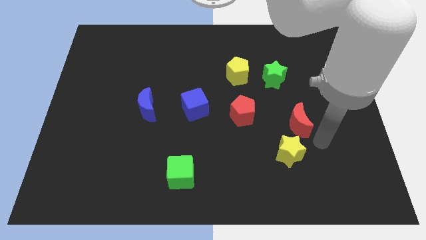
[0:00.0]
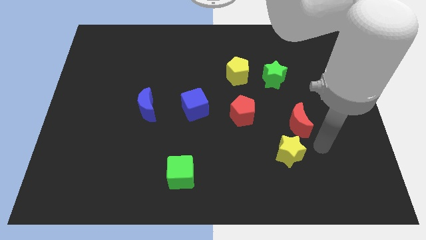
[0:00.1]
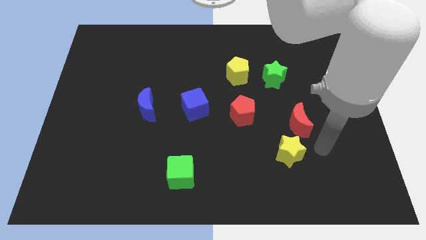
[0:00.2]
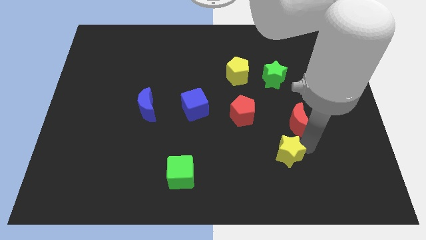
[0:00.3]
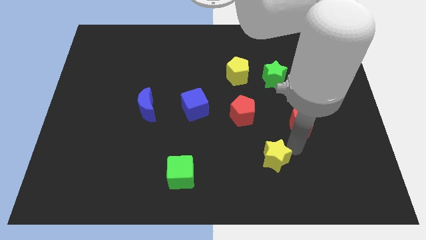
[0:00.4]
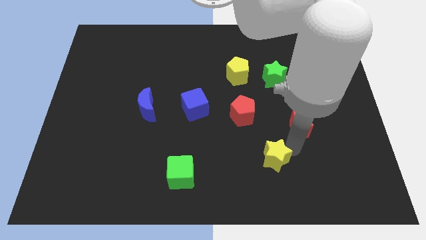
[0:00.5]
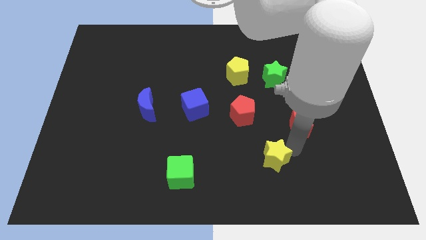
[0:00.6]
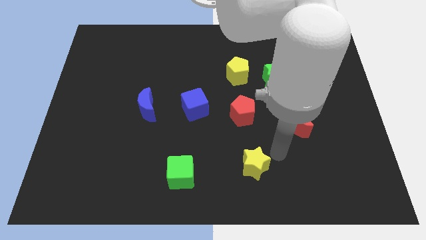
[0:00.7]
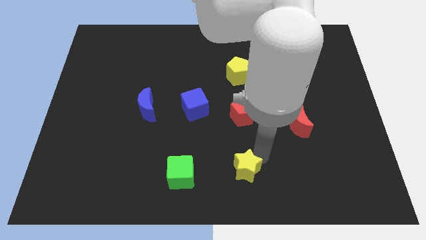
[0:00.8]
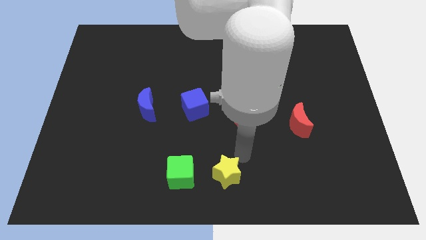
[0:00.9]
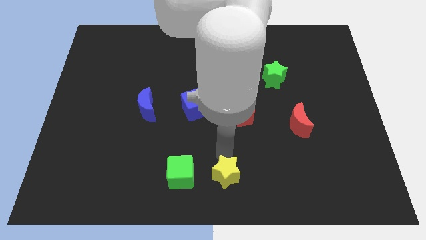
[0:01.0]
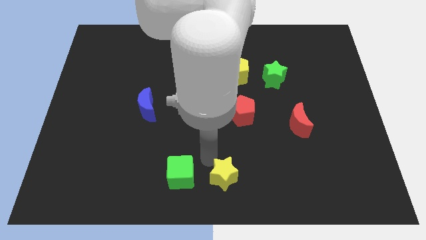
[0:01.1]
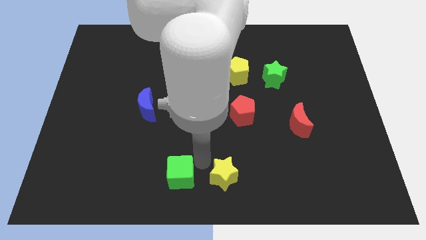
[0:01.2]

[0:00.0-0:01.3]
move the yellow star to the right of the green cube

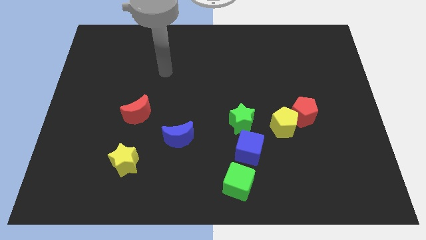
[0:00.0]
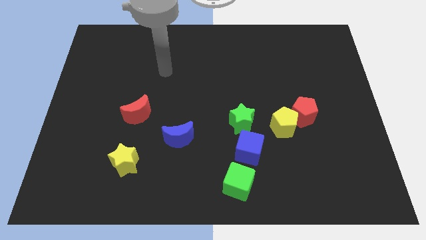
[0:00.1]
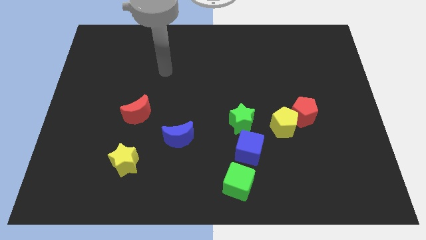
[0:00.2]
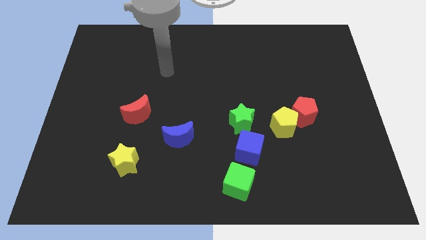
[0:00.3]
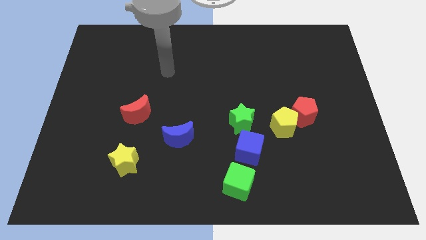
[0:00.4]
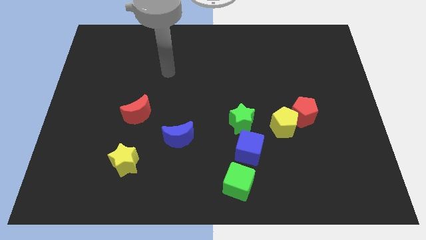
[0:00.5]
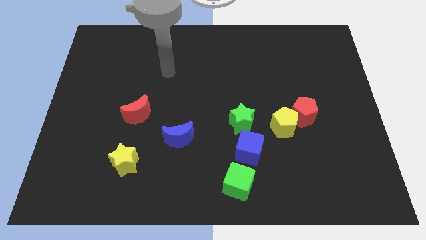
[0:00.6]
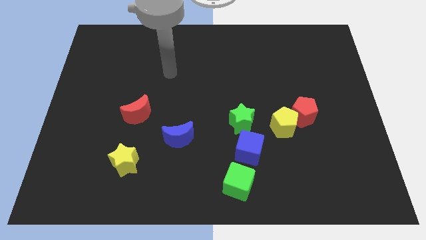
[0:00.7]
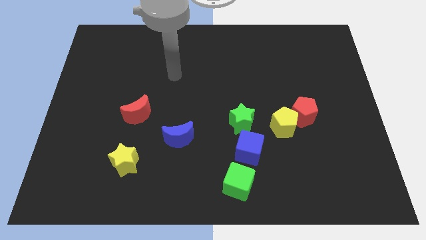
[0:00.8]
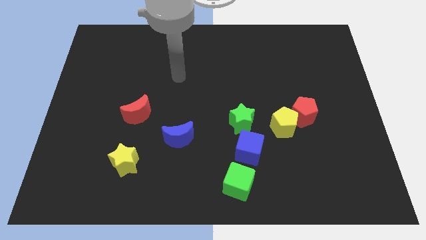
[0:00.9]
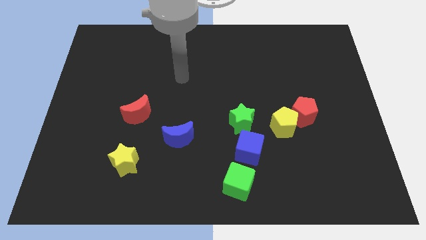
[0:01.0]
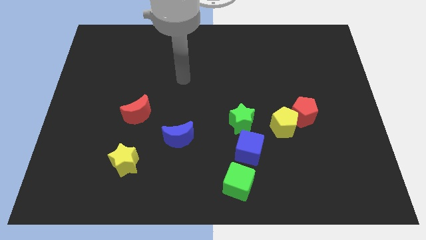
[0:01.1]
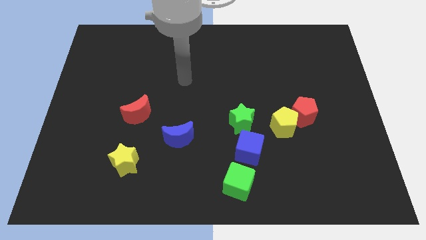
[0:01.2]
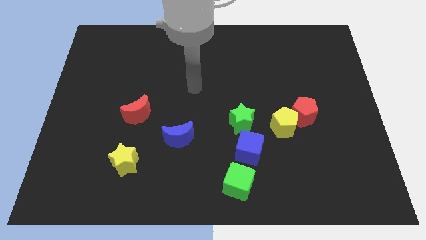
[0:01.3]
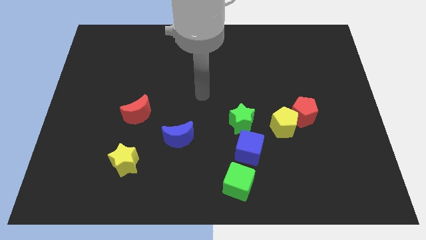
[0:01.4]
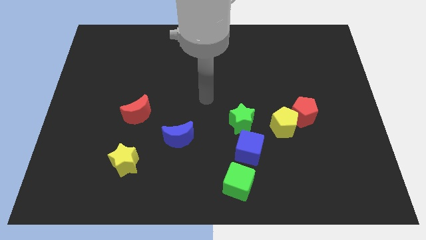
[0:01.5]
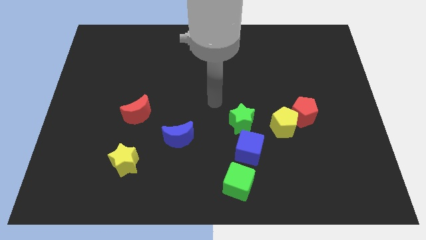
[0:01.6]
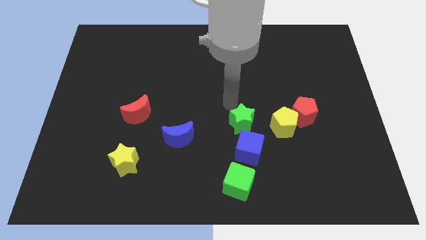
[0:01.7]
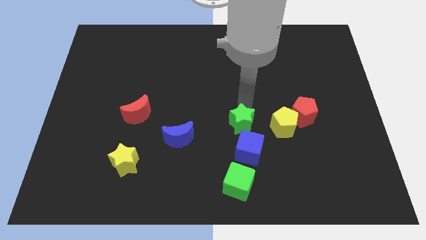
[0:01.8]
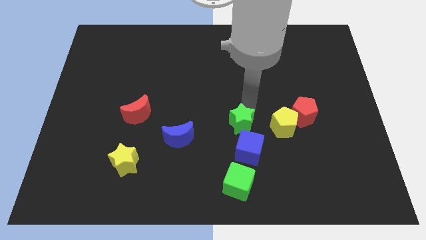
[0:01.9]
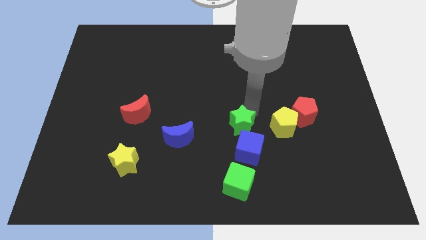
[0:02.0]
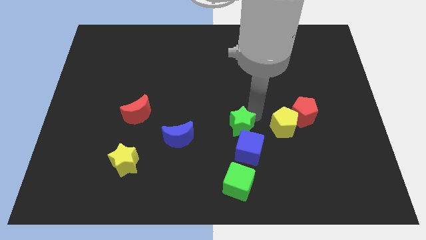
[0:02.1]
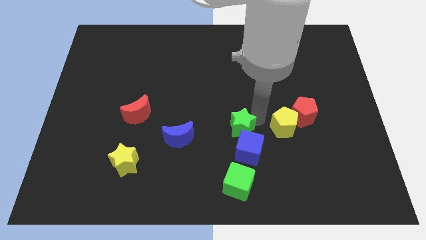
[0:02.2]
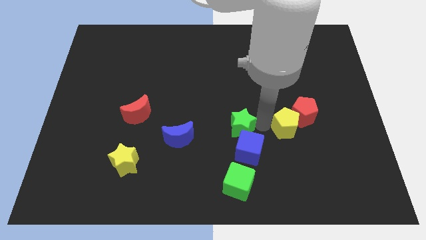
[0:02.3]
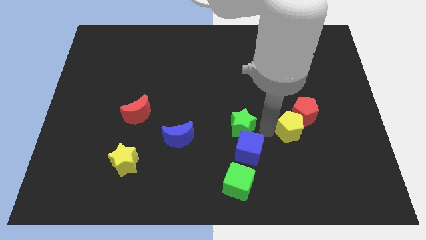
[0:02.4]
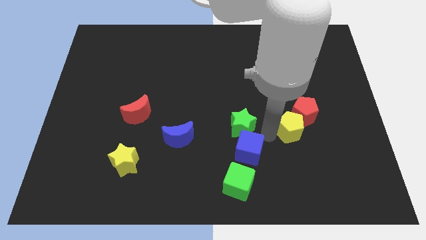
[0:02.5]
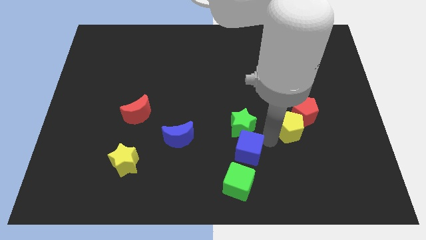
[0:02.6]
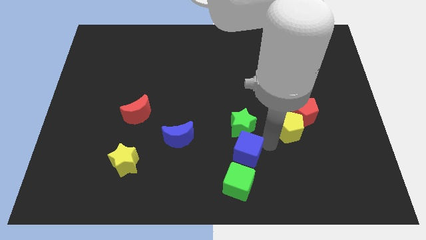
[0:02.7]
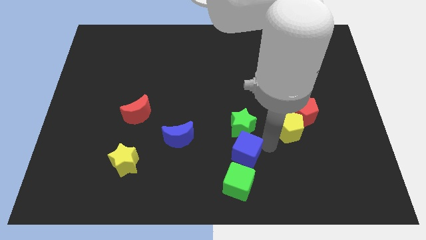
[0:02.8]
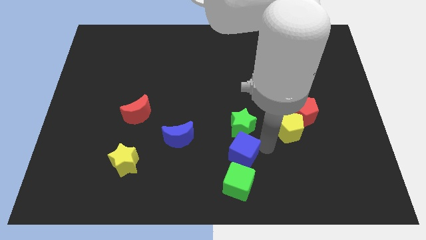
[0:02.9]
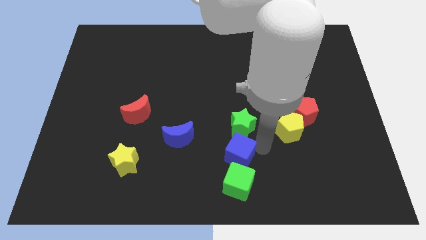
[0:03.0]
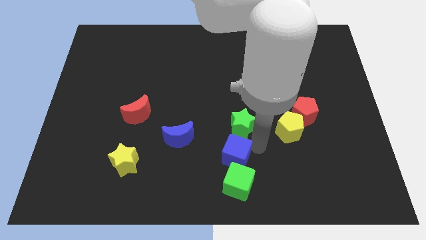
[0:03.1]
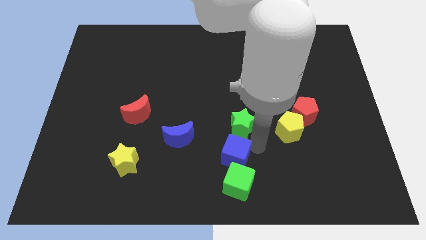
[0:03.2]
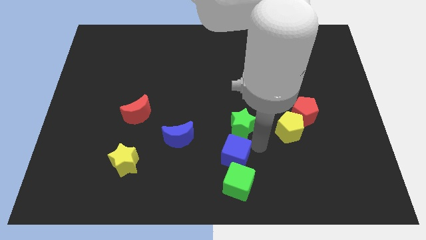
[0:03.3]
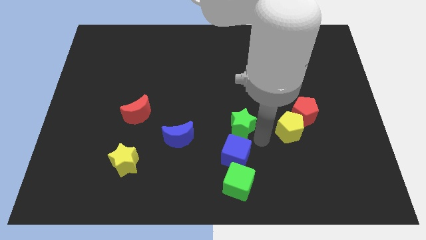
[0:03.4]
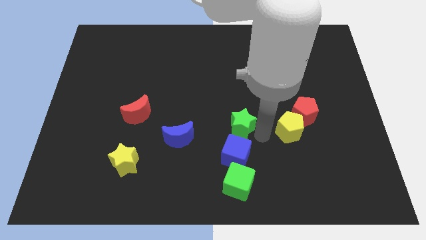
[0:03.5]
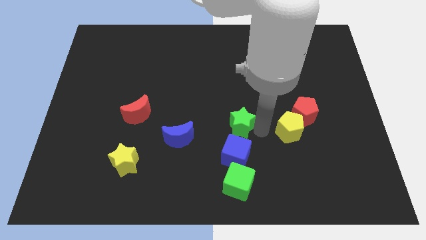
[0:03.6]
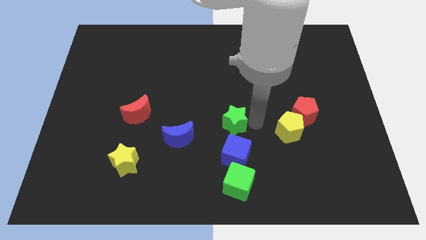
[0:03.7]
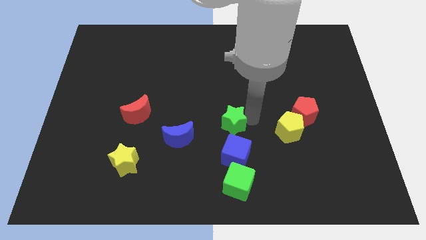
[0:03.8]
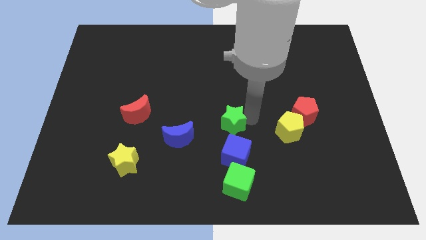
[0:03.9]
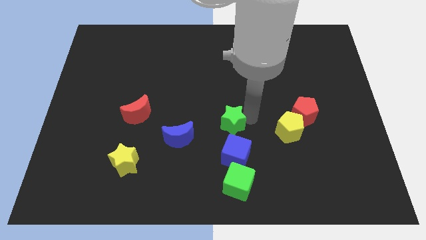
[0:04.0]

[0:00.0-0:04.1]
place the blue cube in between the green star and green cube

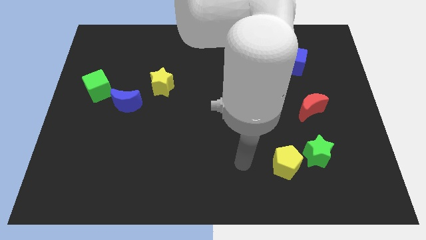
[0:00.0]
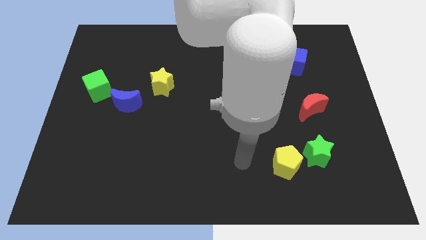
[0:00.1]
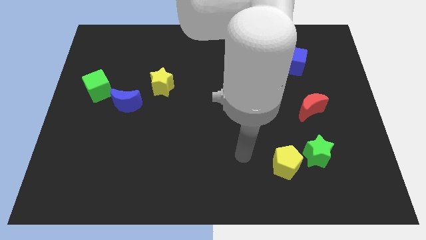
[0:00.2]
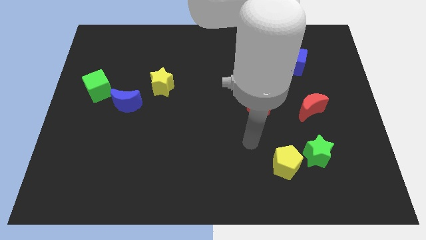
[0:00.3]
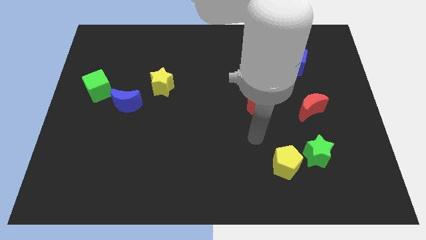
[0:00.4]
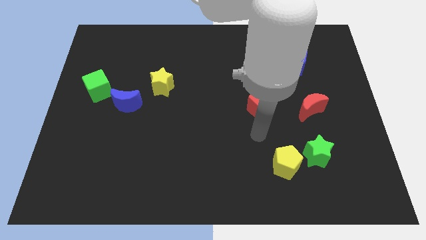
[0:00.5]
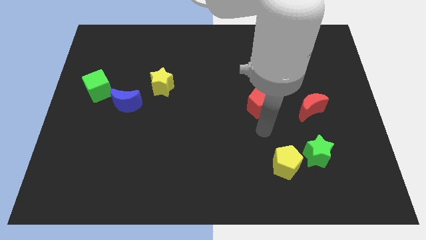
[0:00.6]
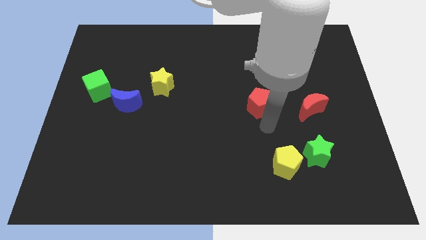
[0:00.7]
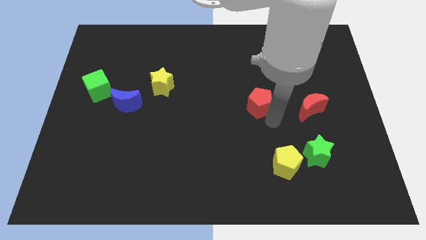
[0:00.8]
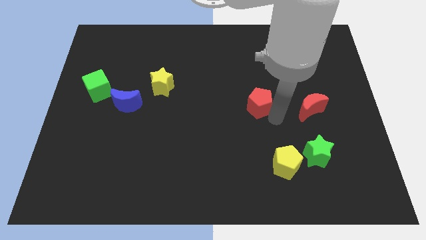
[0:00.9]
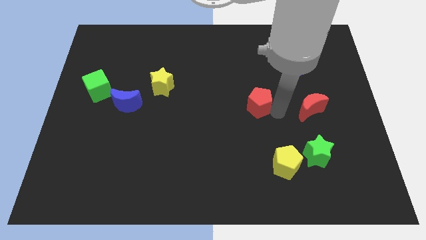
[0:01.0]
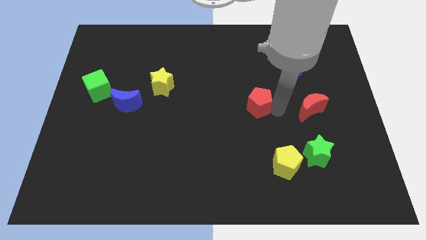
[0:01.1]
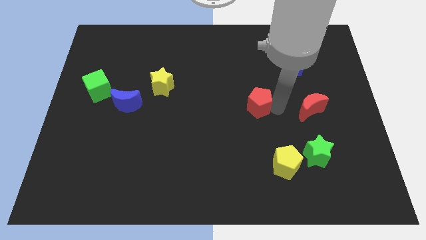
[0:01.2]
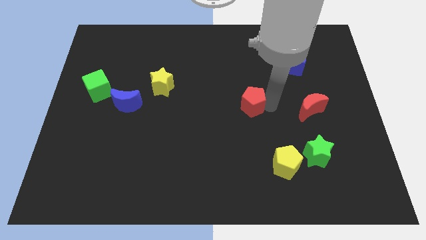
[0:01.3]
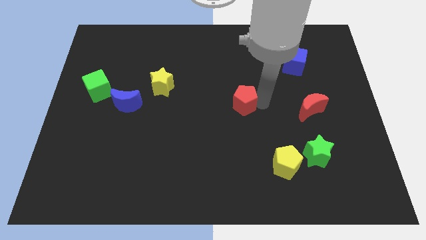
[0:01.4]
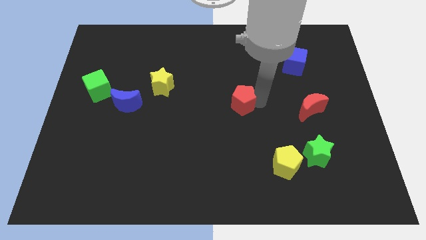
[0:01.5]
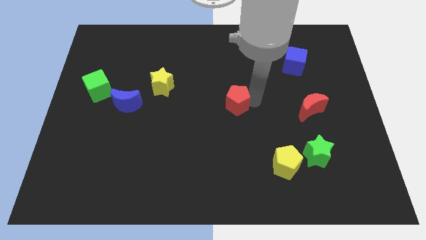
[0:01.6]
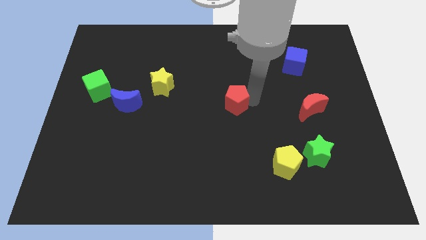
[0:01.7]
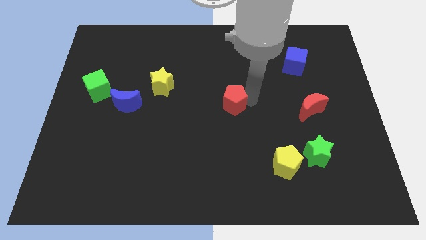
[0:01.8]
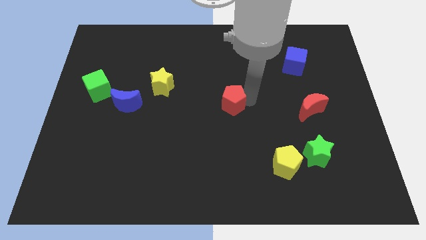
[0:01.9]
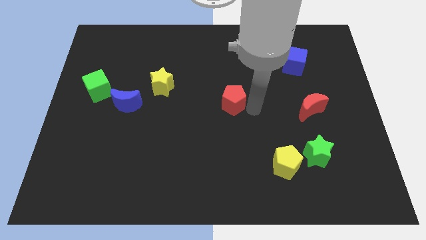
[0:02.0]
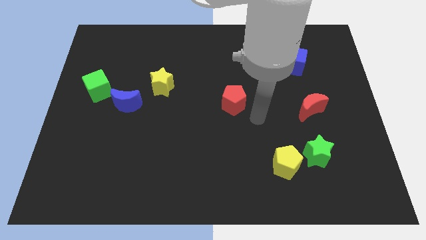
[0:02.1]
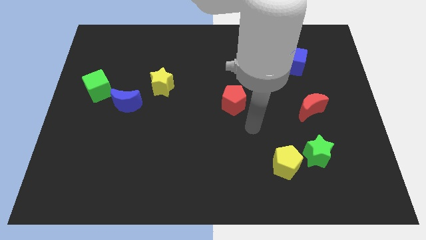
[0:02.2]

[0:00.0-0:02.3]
move red pentagon a bit apart from red crescent

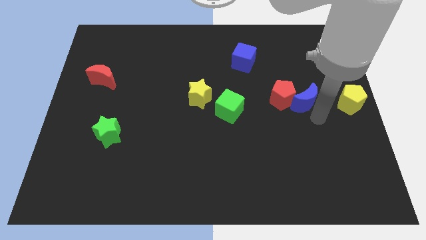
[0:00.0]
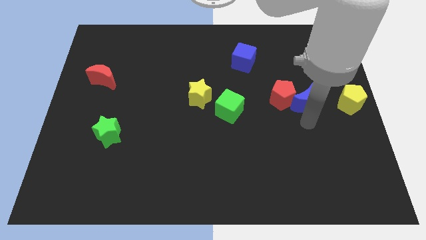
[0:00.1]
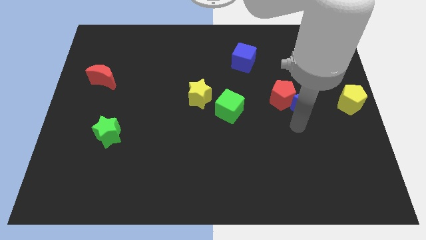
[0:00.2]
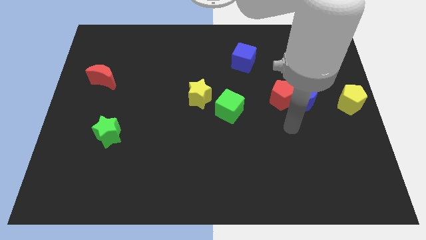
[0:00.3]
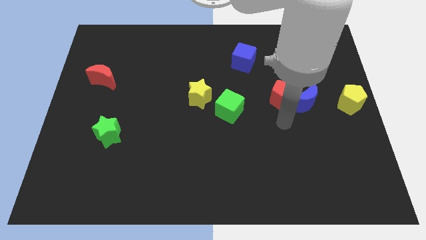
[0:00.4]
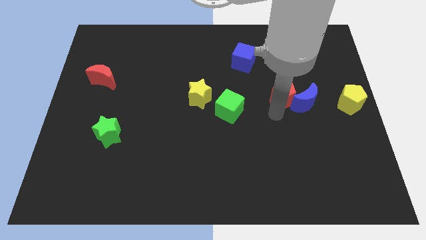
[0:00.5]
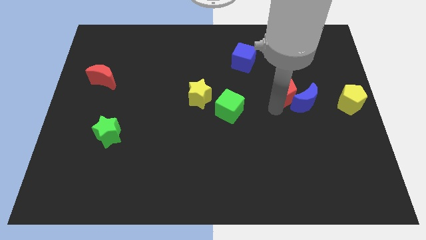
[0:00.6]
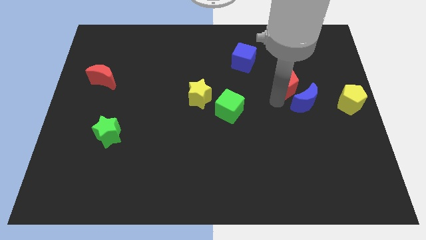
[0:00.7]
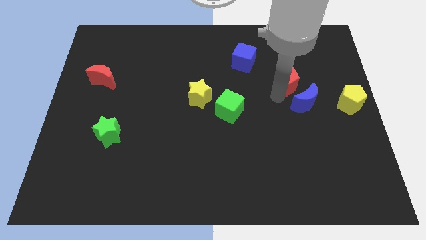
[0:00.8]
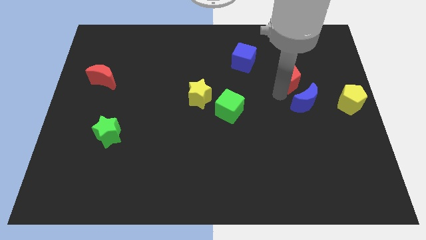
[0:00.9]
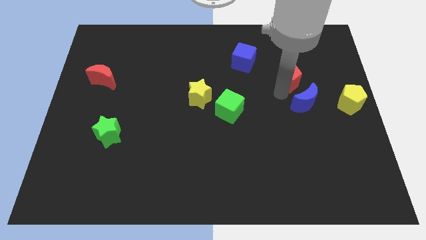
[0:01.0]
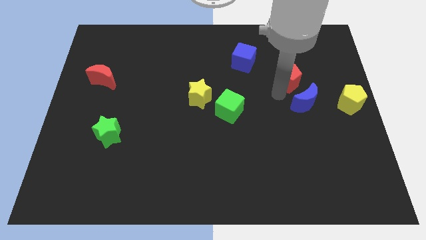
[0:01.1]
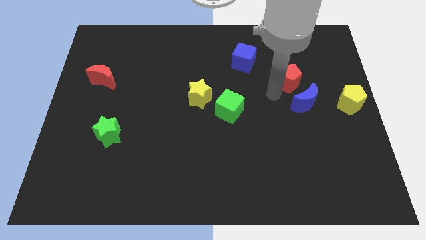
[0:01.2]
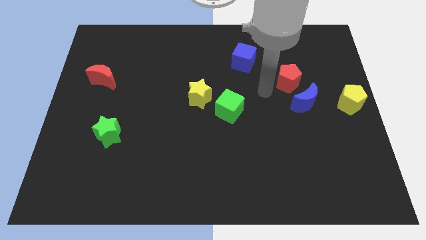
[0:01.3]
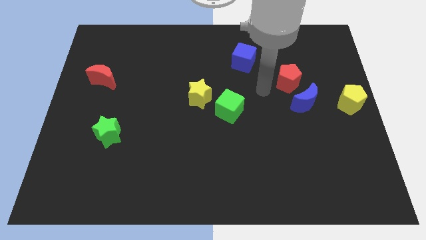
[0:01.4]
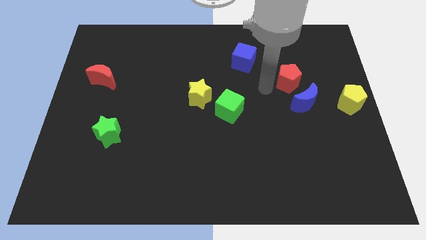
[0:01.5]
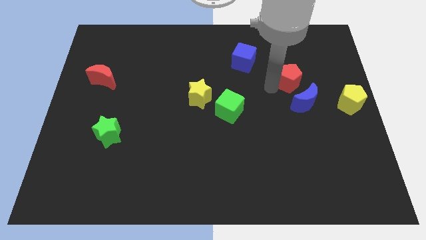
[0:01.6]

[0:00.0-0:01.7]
separate the red pentagon from the blue crescent
